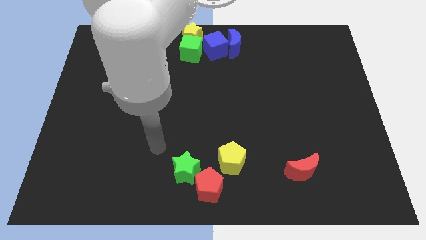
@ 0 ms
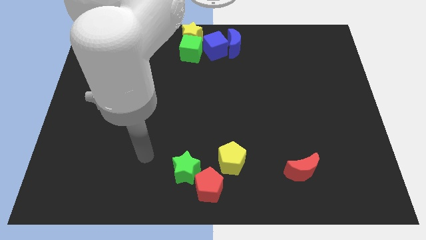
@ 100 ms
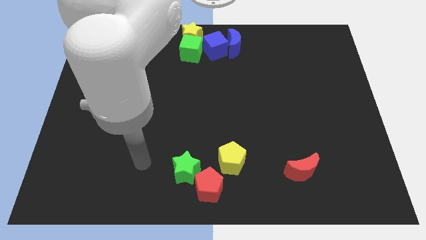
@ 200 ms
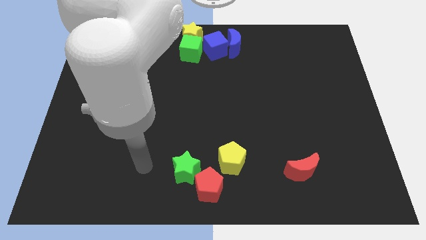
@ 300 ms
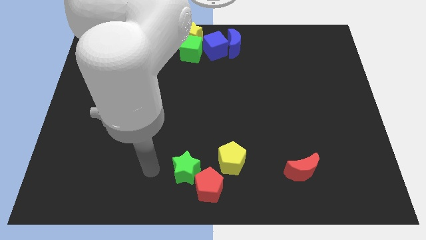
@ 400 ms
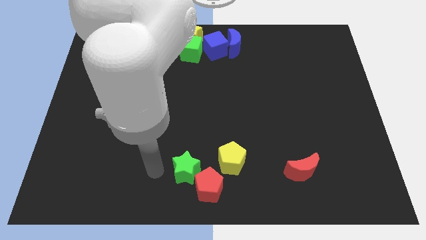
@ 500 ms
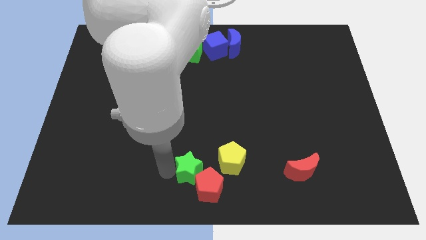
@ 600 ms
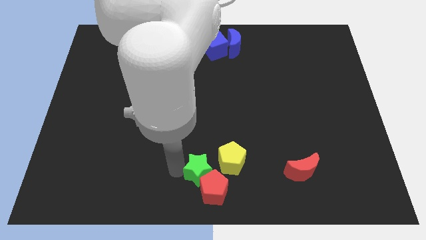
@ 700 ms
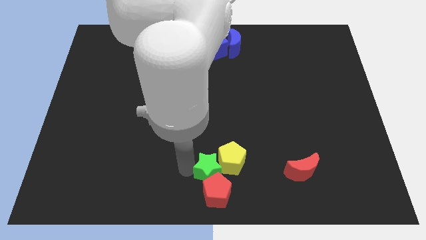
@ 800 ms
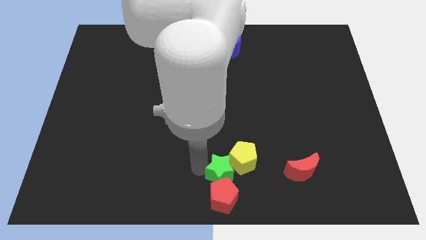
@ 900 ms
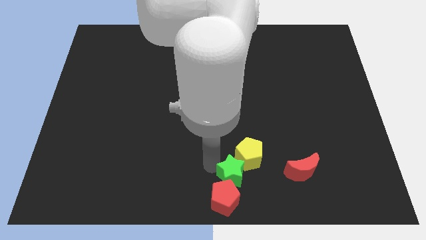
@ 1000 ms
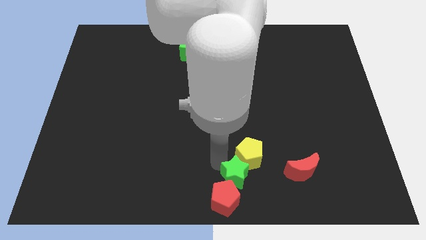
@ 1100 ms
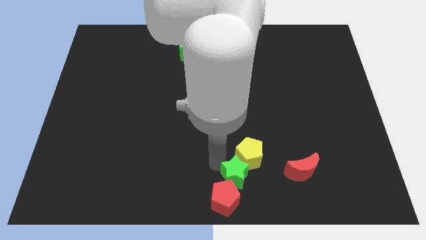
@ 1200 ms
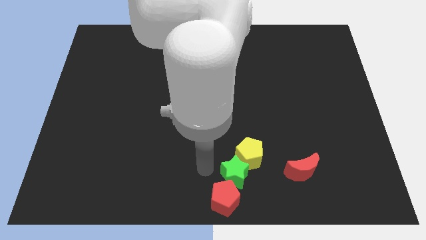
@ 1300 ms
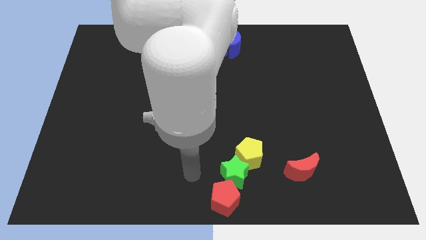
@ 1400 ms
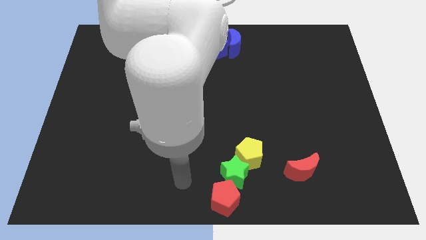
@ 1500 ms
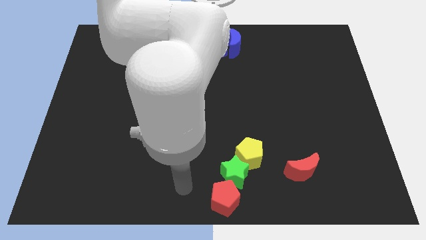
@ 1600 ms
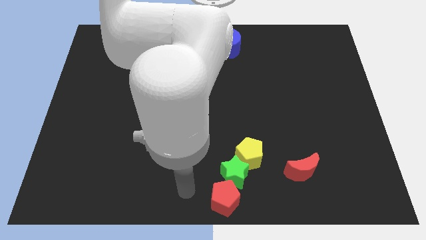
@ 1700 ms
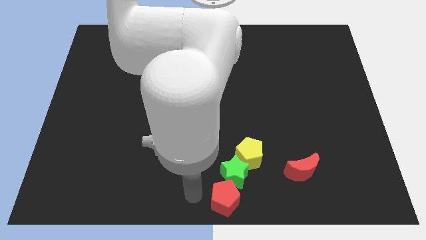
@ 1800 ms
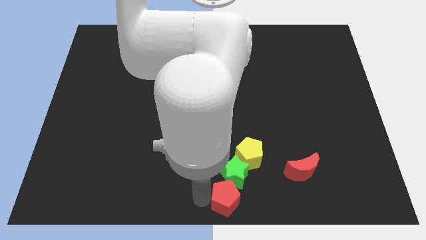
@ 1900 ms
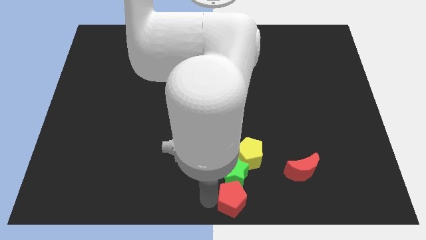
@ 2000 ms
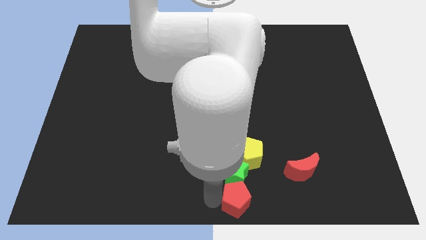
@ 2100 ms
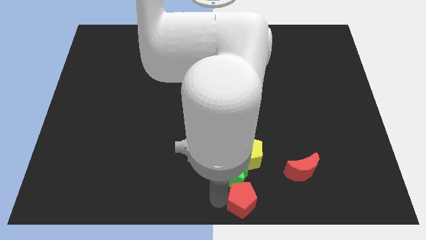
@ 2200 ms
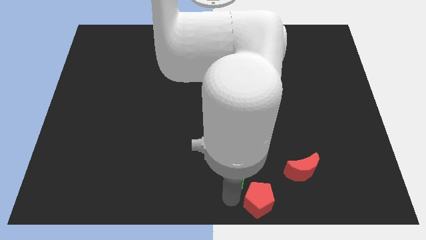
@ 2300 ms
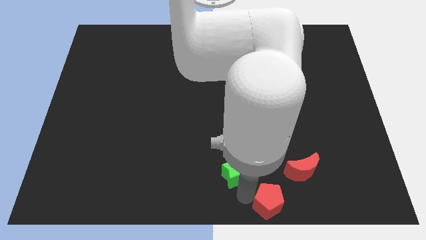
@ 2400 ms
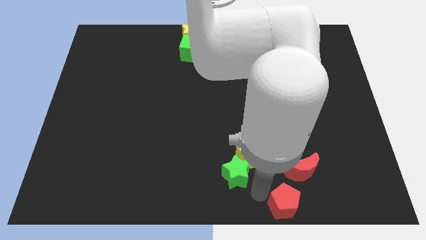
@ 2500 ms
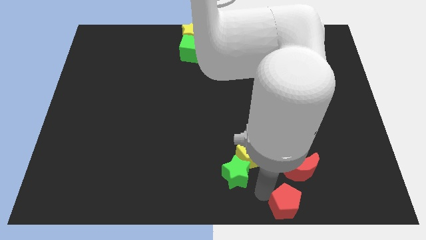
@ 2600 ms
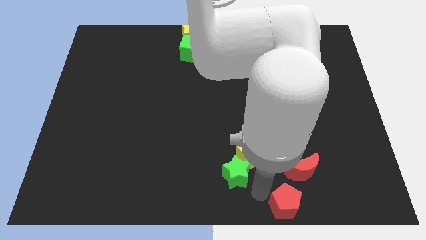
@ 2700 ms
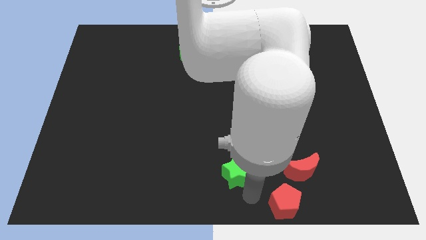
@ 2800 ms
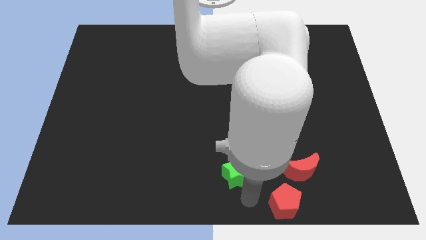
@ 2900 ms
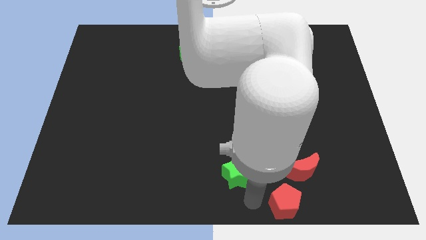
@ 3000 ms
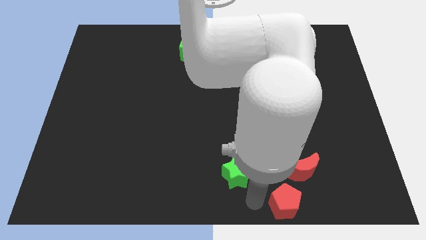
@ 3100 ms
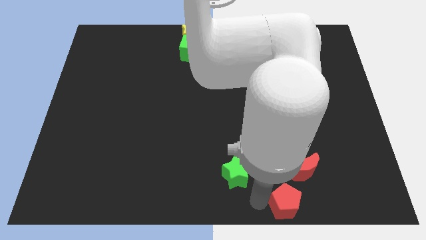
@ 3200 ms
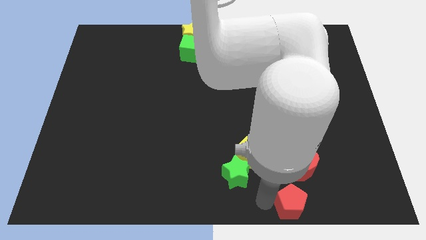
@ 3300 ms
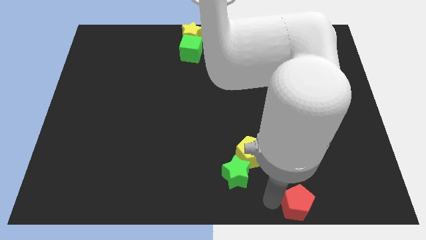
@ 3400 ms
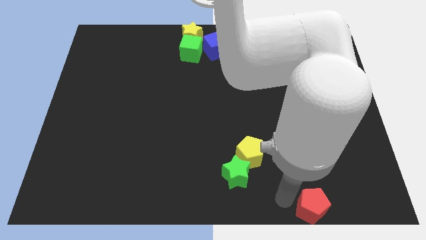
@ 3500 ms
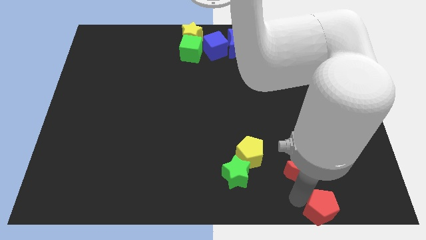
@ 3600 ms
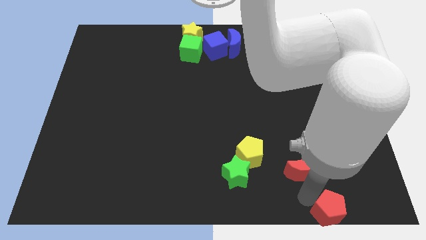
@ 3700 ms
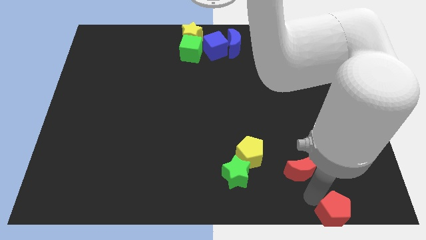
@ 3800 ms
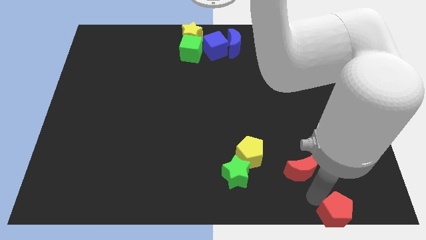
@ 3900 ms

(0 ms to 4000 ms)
push the green star red pentagon towards right side of the board

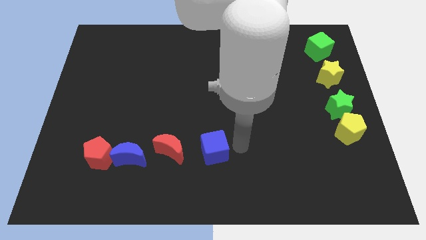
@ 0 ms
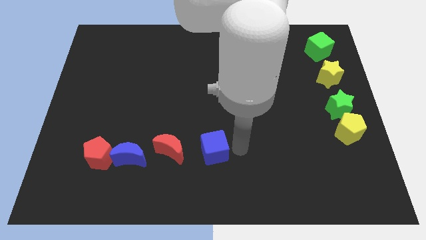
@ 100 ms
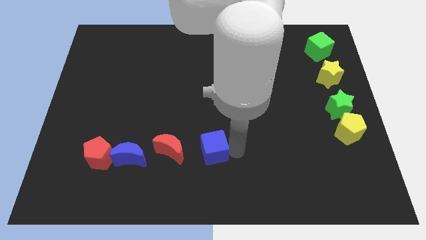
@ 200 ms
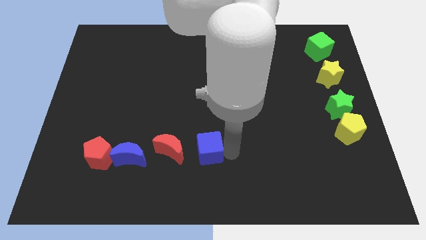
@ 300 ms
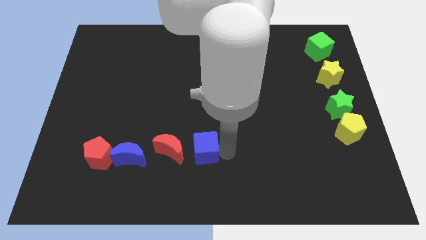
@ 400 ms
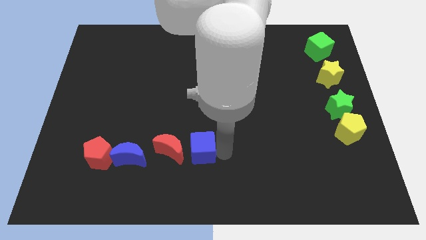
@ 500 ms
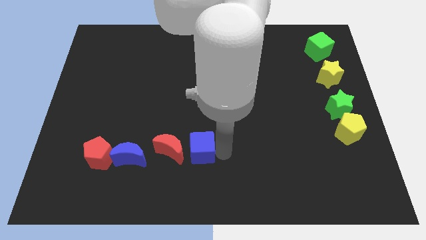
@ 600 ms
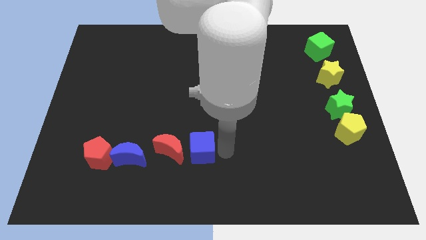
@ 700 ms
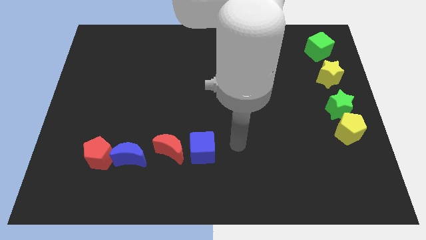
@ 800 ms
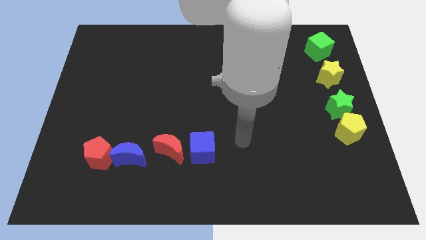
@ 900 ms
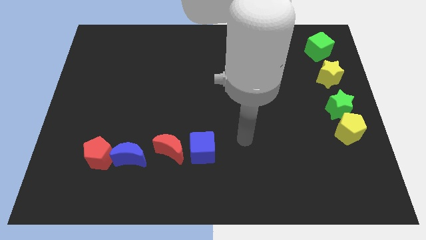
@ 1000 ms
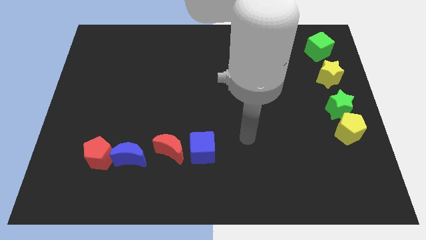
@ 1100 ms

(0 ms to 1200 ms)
push the blue cube towards the left of red crescent

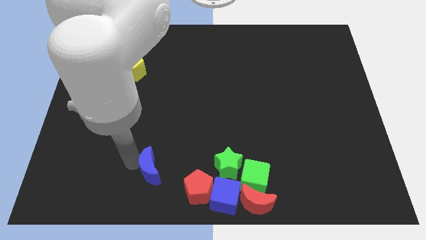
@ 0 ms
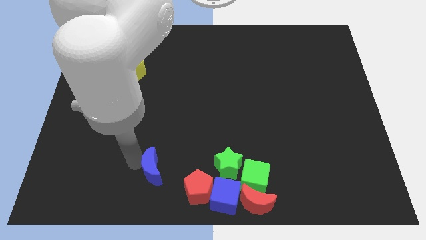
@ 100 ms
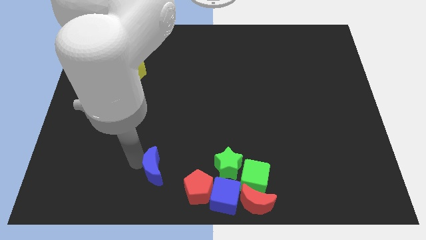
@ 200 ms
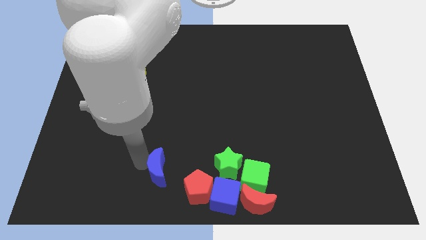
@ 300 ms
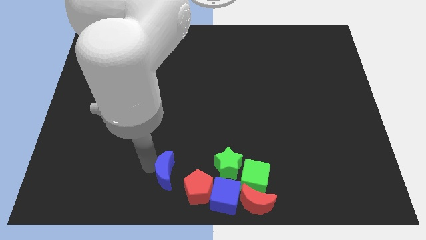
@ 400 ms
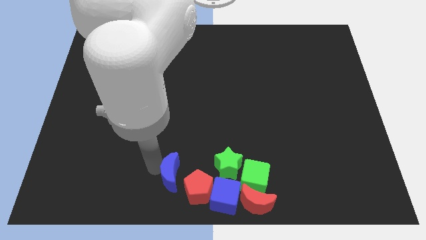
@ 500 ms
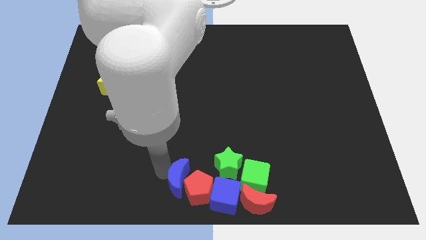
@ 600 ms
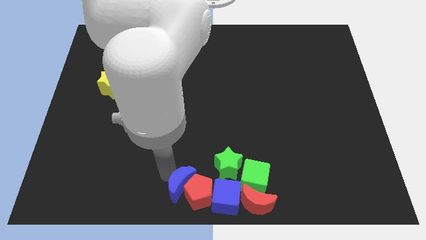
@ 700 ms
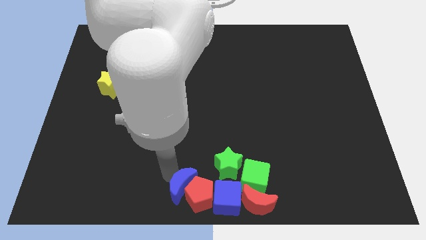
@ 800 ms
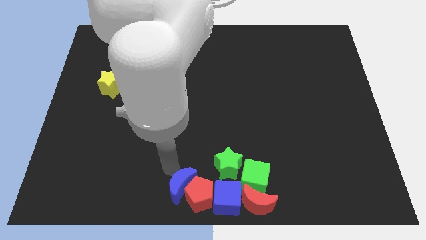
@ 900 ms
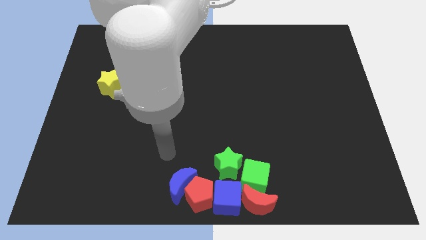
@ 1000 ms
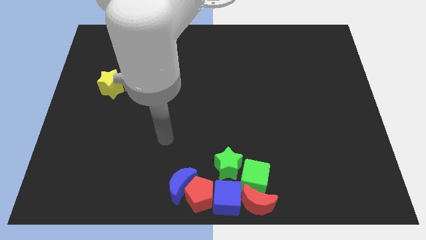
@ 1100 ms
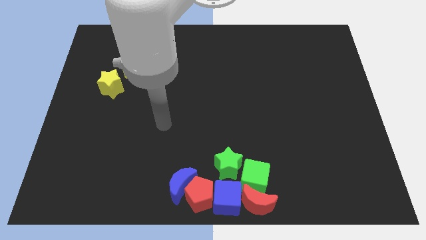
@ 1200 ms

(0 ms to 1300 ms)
push the blue block into red pentagon

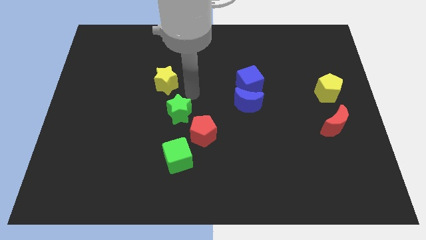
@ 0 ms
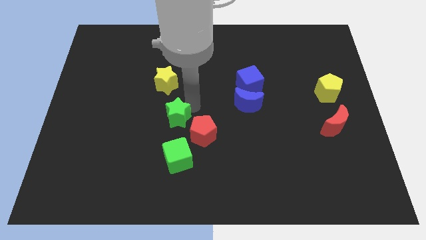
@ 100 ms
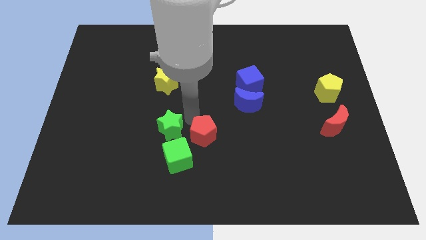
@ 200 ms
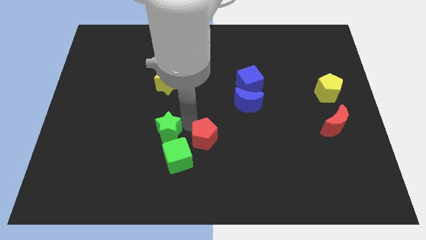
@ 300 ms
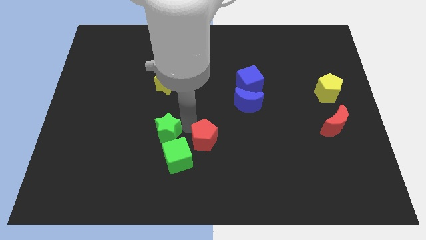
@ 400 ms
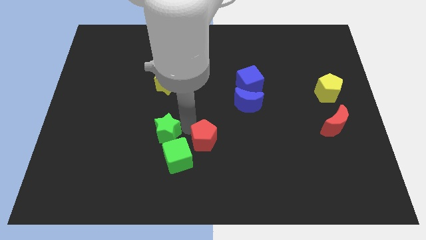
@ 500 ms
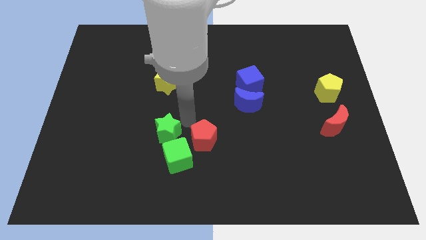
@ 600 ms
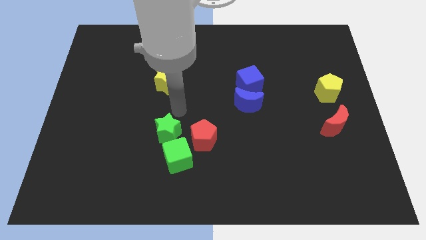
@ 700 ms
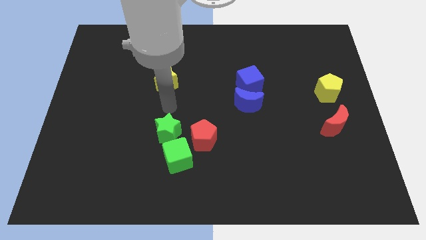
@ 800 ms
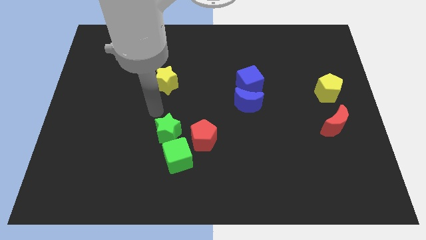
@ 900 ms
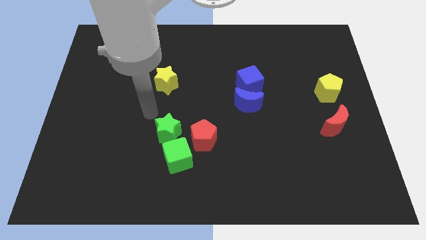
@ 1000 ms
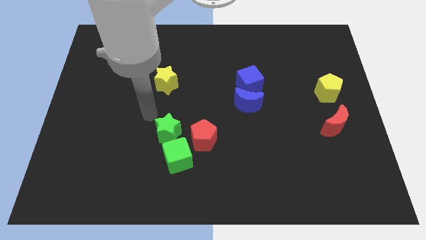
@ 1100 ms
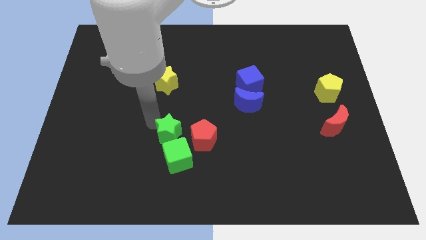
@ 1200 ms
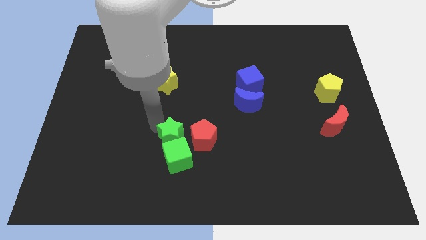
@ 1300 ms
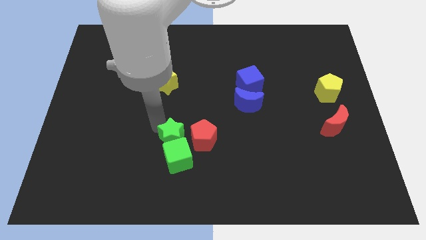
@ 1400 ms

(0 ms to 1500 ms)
move the green star into the green cube

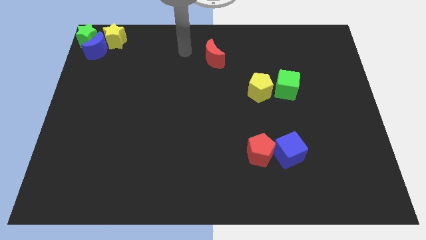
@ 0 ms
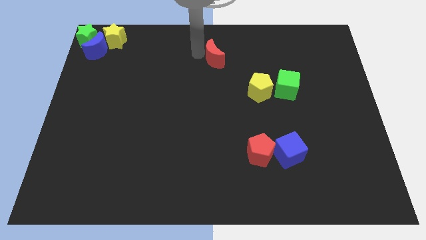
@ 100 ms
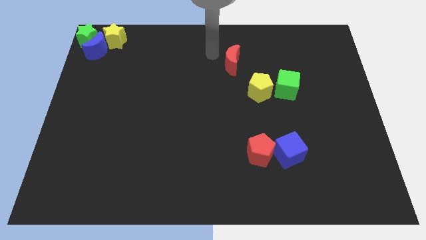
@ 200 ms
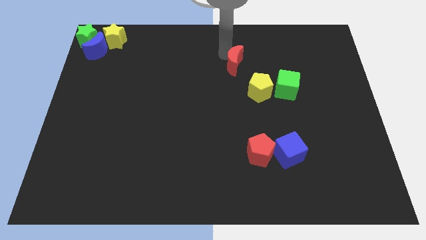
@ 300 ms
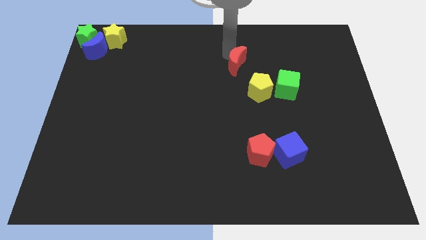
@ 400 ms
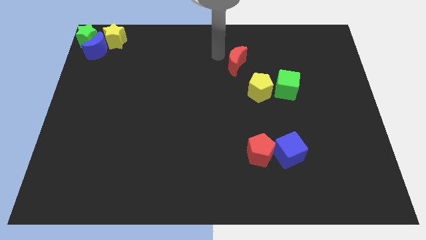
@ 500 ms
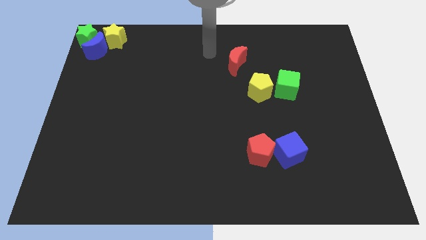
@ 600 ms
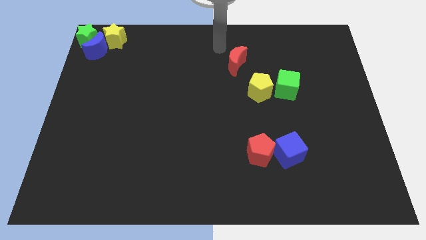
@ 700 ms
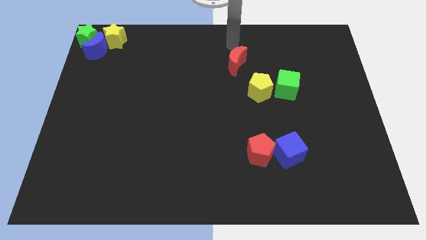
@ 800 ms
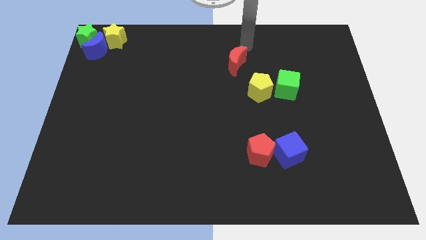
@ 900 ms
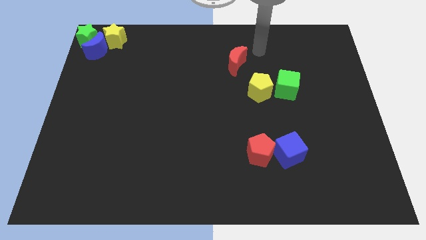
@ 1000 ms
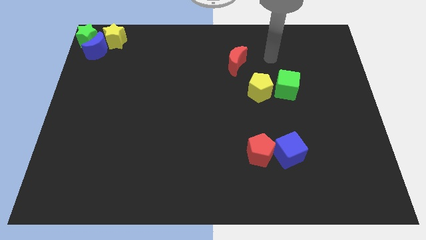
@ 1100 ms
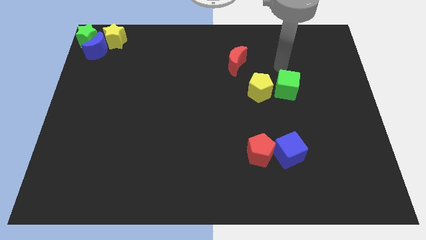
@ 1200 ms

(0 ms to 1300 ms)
push red crescent
